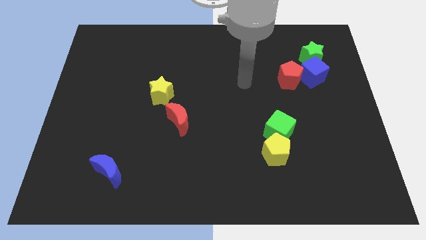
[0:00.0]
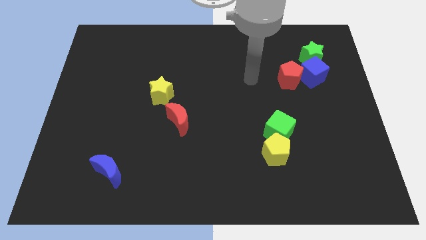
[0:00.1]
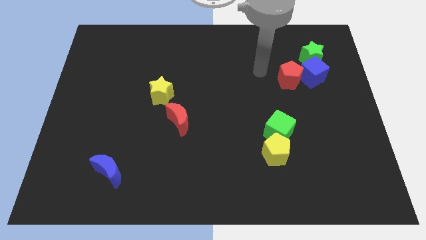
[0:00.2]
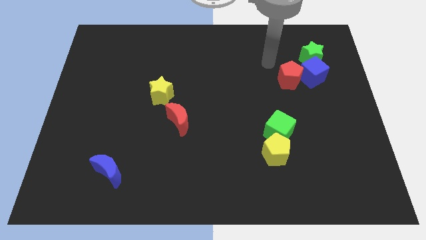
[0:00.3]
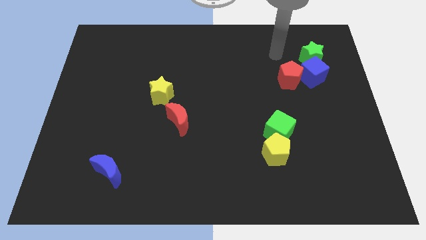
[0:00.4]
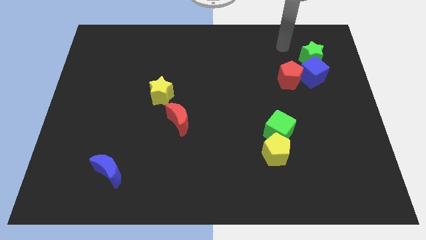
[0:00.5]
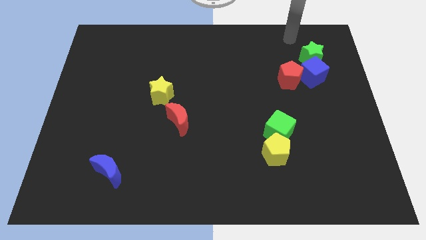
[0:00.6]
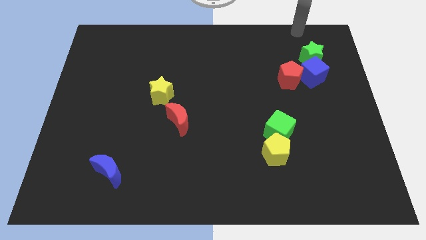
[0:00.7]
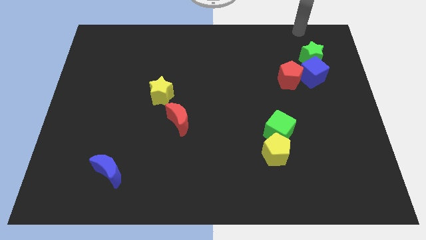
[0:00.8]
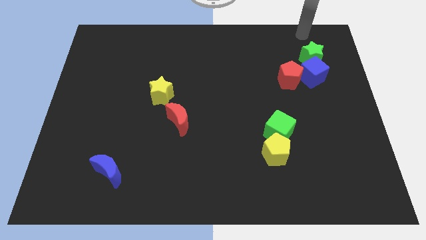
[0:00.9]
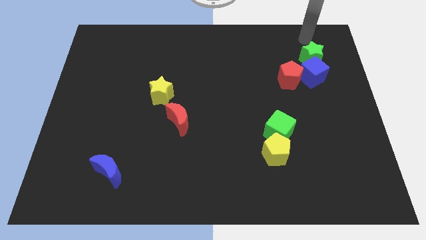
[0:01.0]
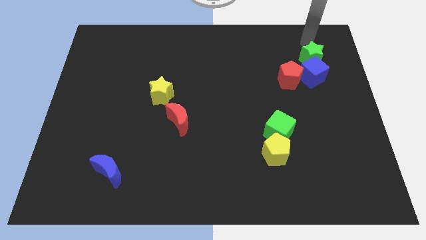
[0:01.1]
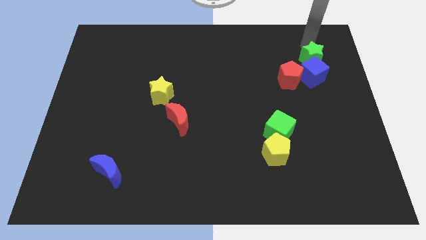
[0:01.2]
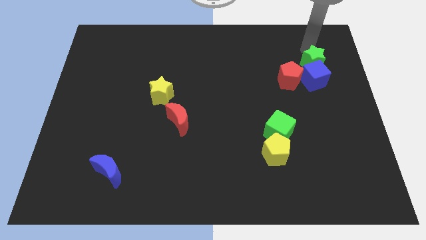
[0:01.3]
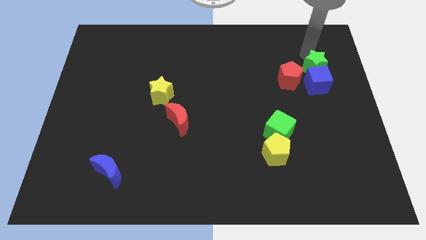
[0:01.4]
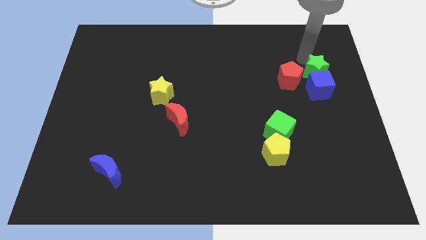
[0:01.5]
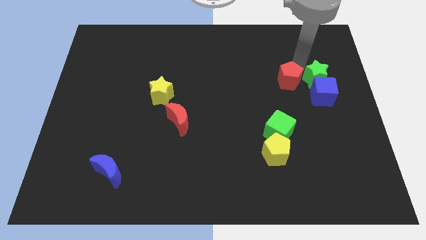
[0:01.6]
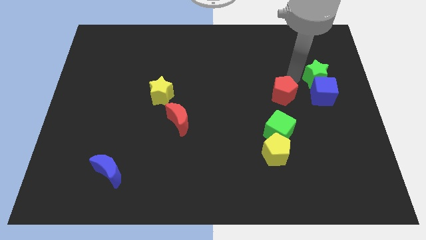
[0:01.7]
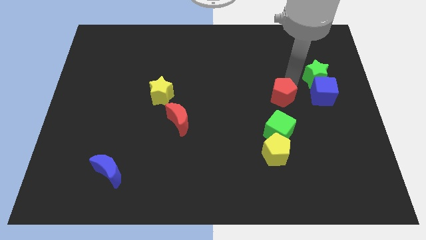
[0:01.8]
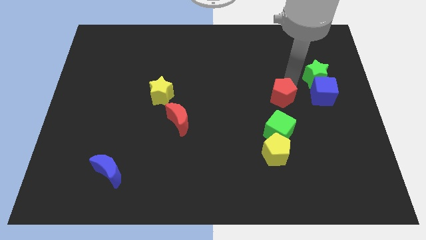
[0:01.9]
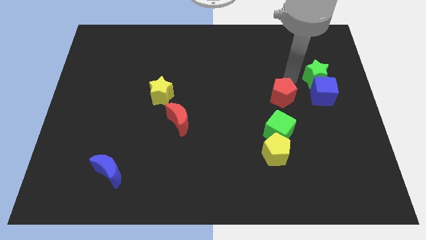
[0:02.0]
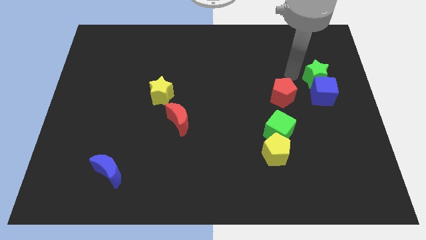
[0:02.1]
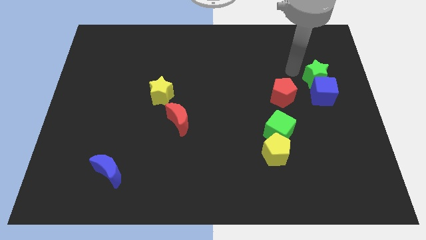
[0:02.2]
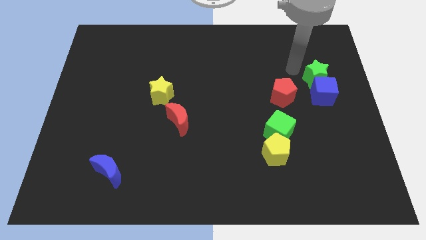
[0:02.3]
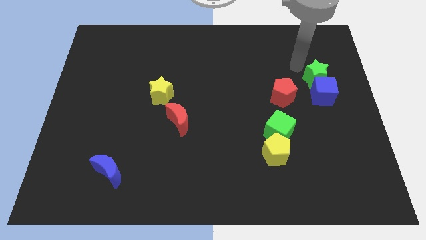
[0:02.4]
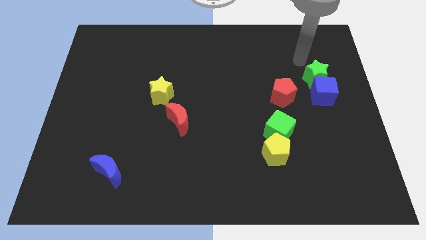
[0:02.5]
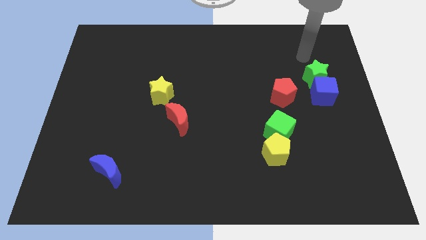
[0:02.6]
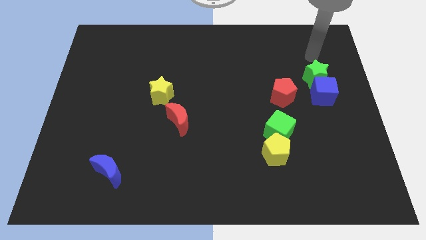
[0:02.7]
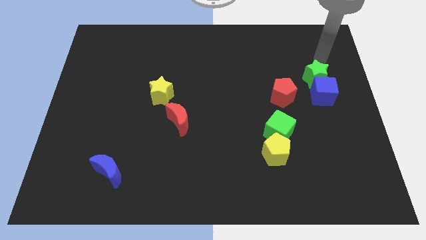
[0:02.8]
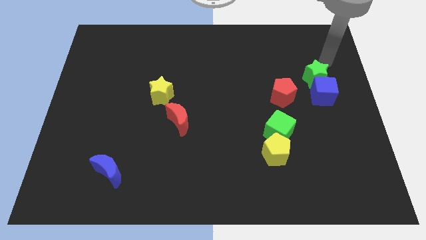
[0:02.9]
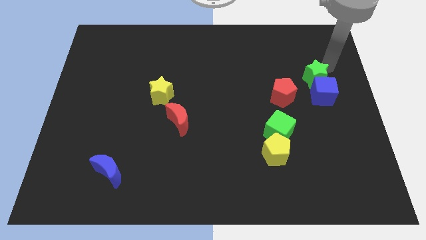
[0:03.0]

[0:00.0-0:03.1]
move green cube above blue cube

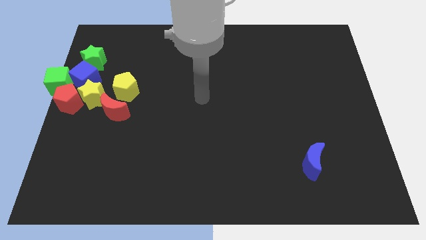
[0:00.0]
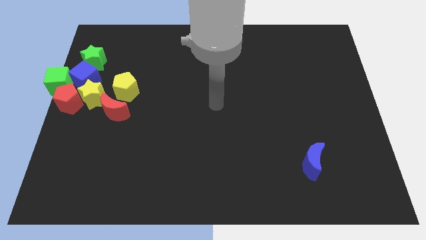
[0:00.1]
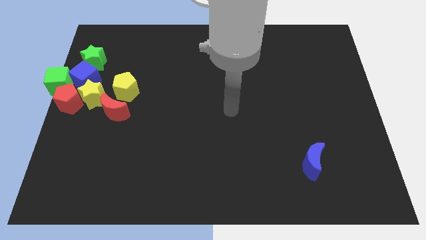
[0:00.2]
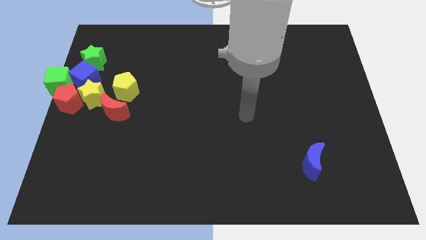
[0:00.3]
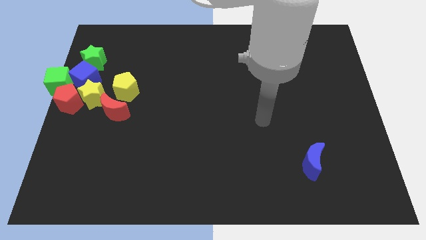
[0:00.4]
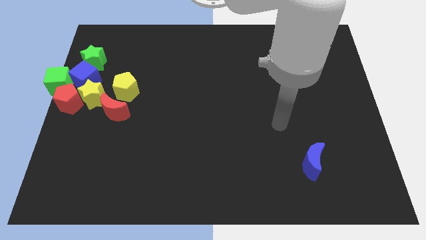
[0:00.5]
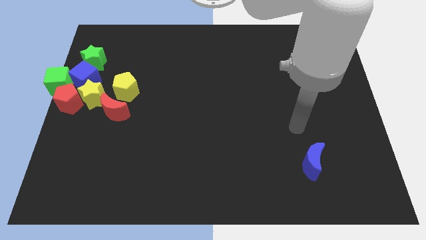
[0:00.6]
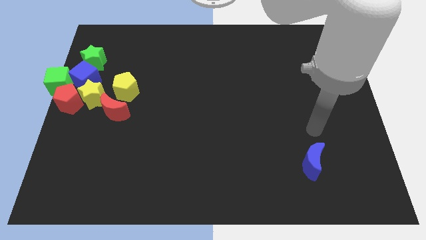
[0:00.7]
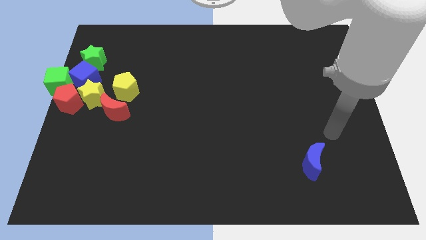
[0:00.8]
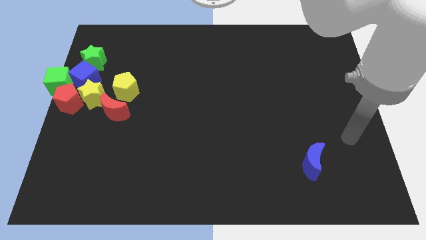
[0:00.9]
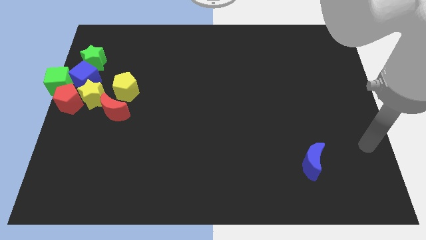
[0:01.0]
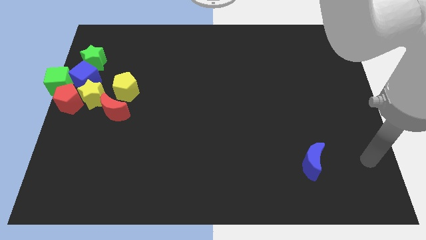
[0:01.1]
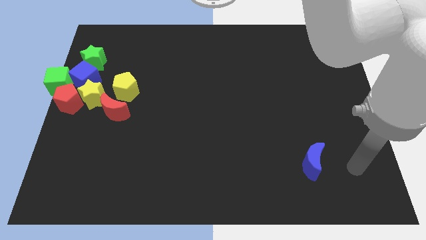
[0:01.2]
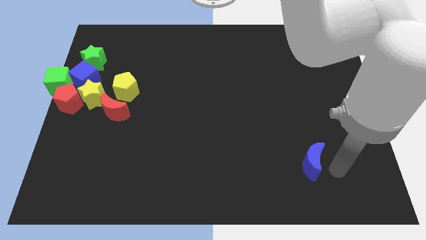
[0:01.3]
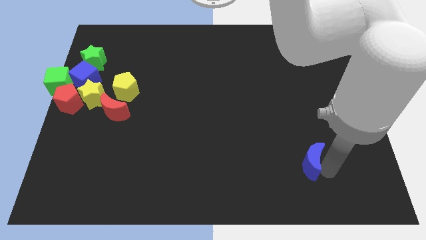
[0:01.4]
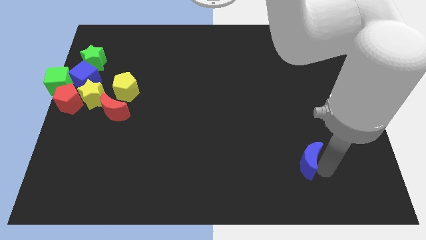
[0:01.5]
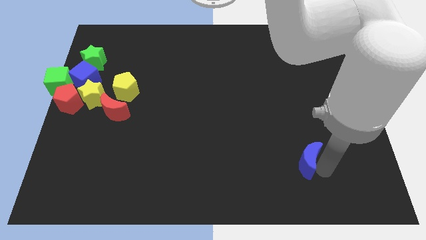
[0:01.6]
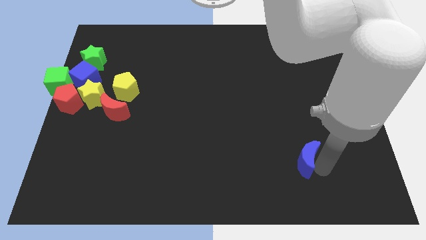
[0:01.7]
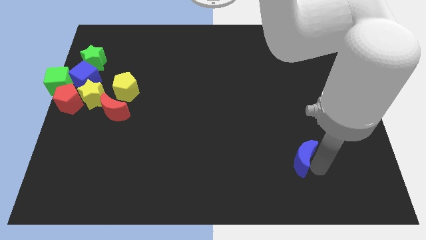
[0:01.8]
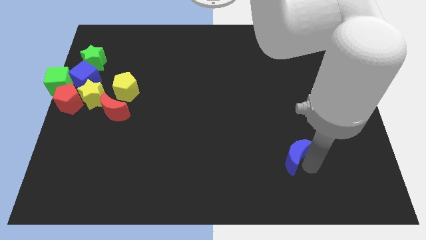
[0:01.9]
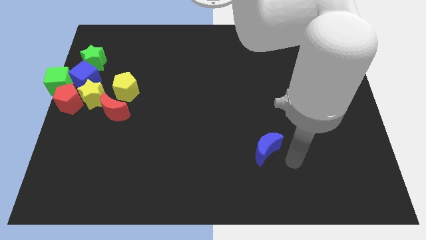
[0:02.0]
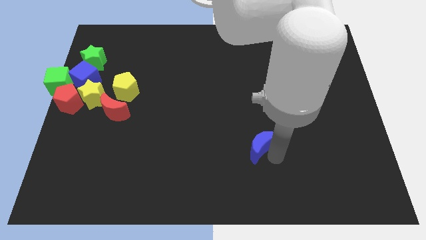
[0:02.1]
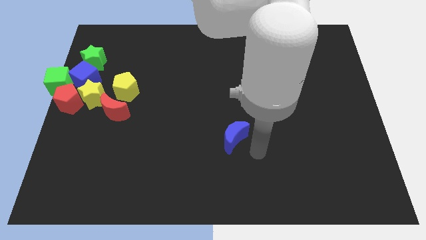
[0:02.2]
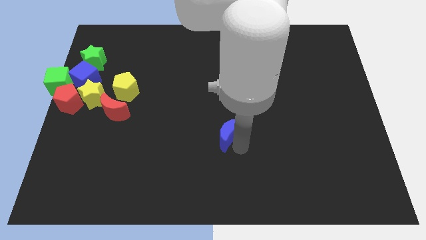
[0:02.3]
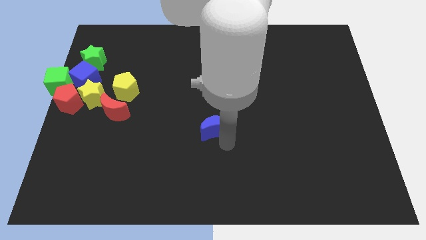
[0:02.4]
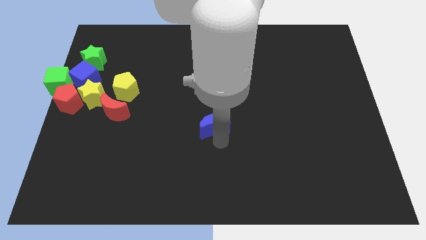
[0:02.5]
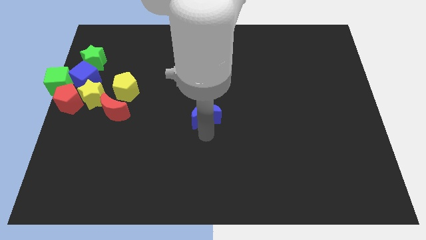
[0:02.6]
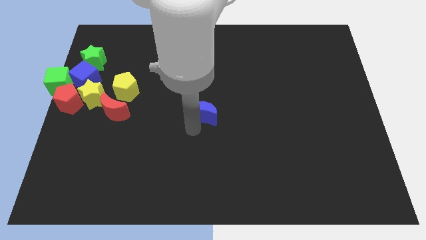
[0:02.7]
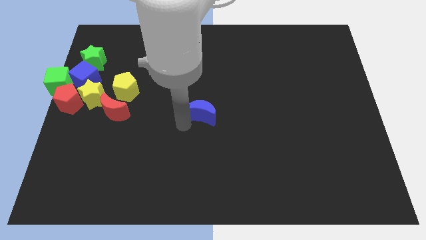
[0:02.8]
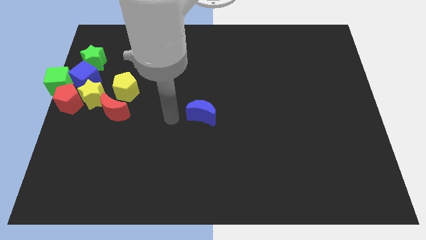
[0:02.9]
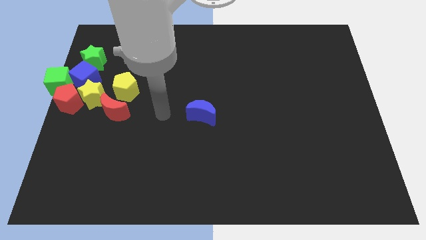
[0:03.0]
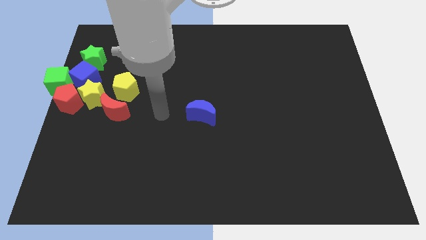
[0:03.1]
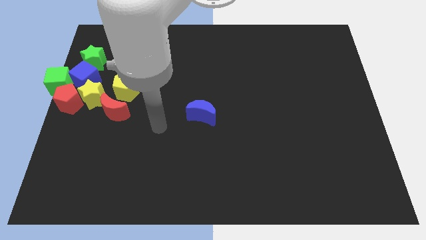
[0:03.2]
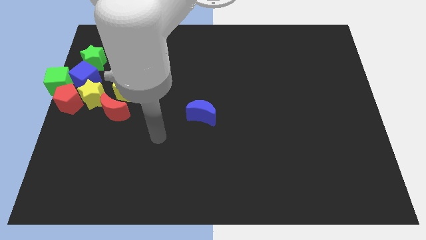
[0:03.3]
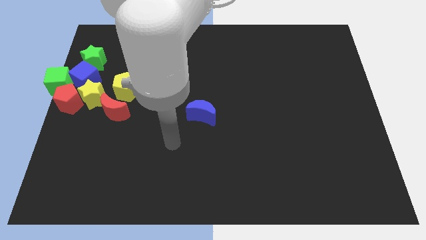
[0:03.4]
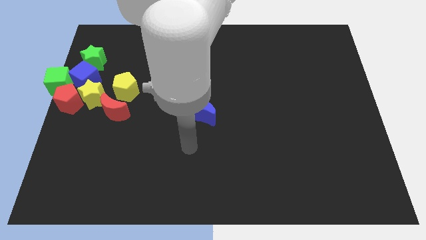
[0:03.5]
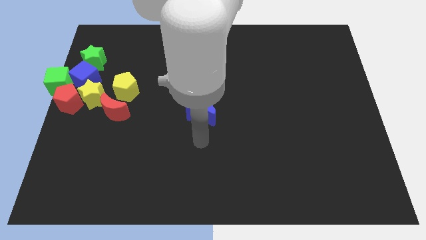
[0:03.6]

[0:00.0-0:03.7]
place the blue moon at the center of the board

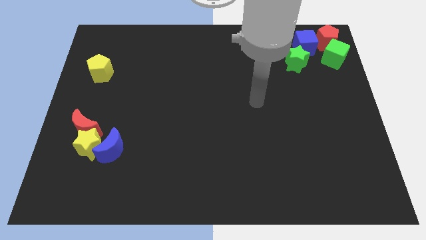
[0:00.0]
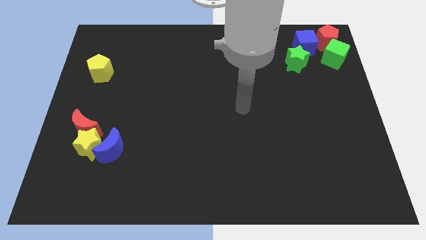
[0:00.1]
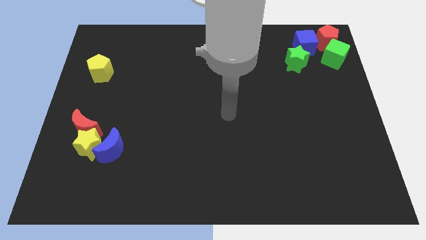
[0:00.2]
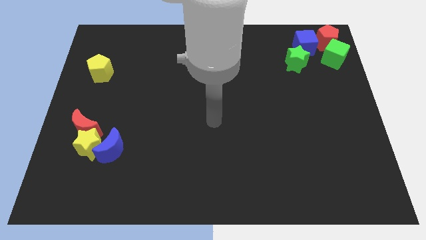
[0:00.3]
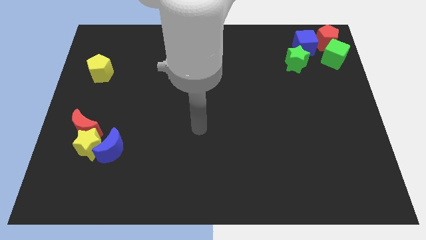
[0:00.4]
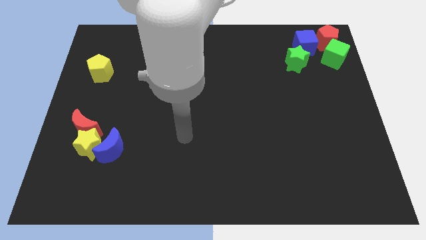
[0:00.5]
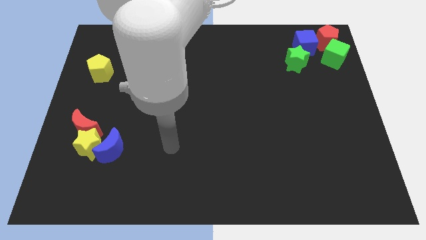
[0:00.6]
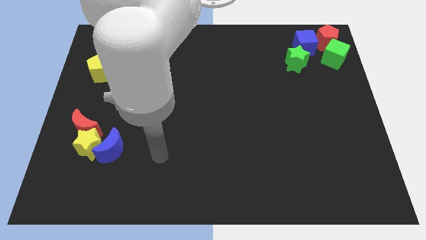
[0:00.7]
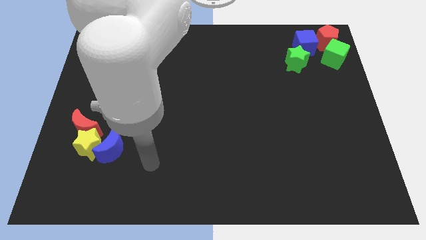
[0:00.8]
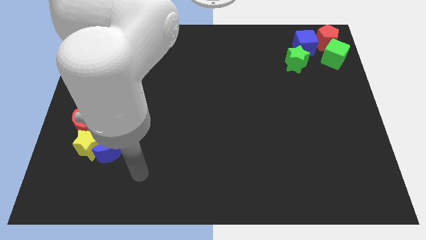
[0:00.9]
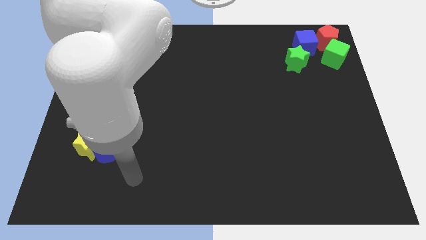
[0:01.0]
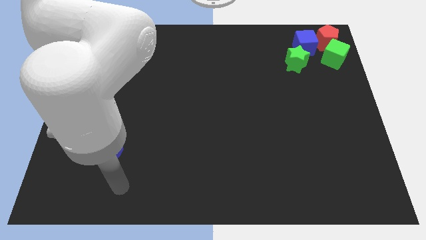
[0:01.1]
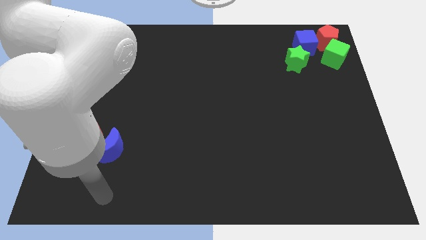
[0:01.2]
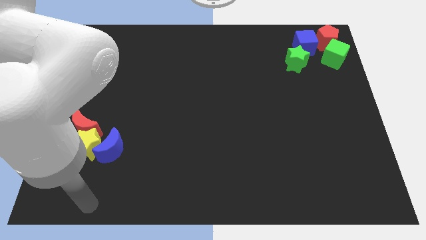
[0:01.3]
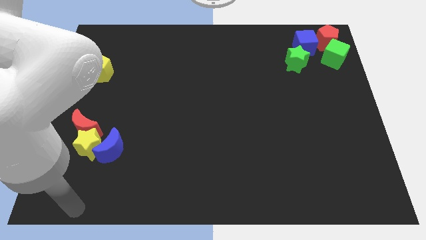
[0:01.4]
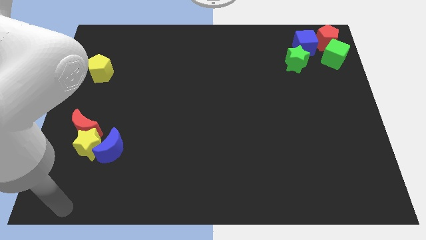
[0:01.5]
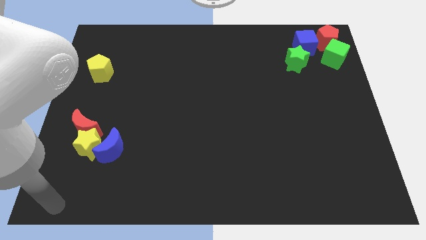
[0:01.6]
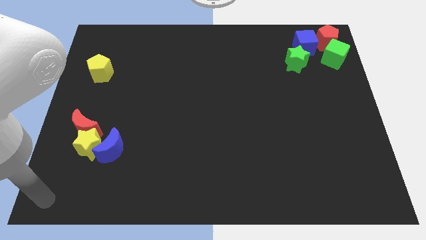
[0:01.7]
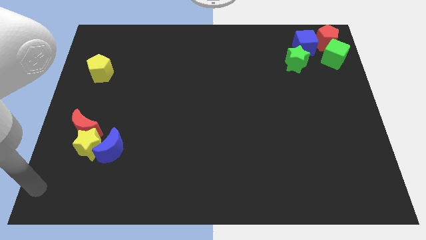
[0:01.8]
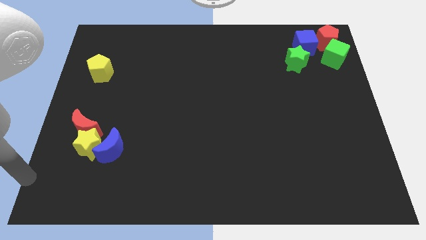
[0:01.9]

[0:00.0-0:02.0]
place your arm to the bottom left corner of the board

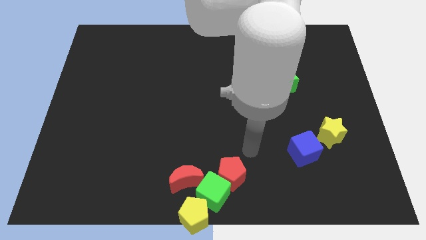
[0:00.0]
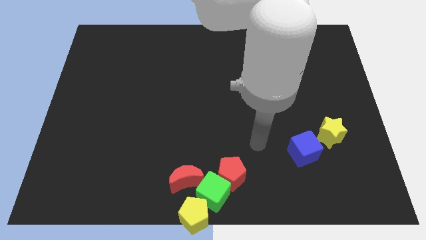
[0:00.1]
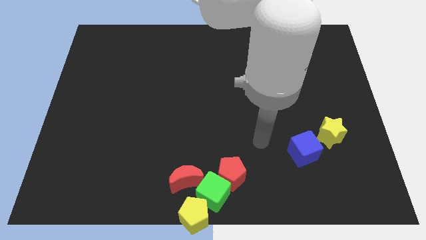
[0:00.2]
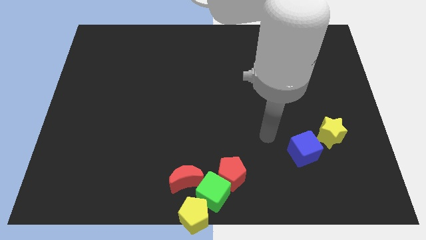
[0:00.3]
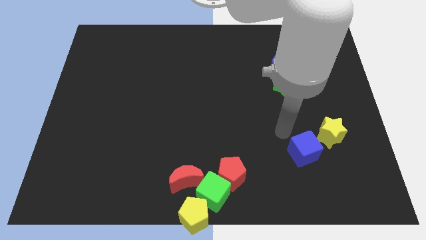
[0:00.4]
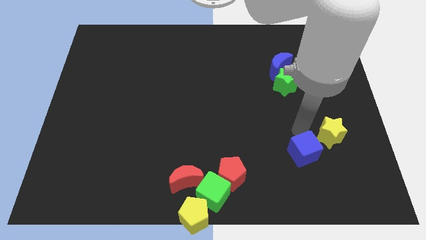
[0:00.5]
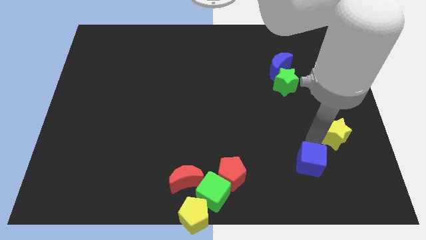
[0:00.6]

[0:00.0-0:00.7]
place the arm on the top of the blue cube
